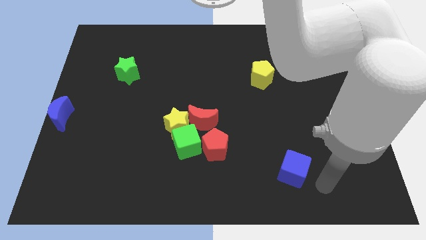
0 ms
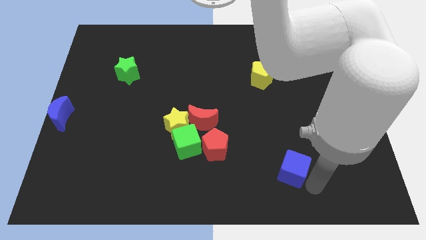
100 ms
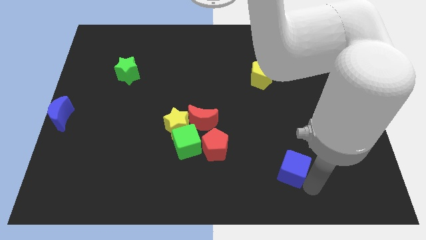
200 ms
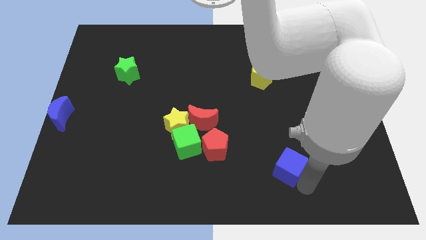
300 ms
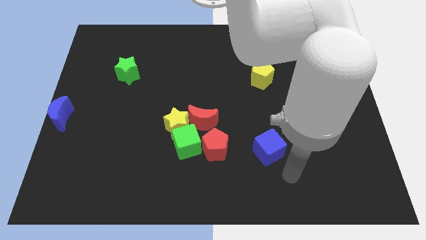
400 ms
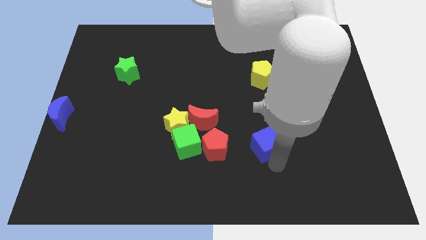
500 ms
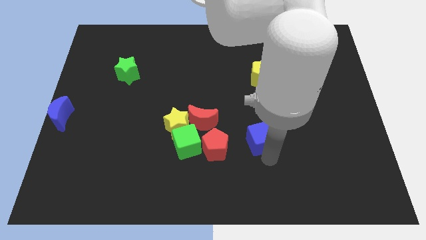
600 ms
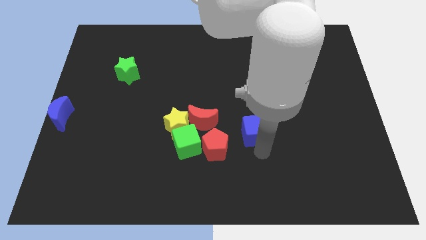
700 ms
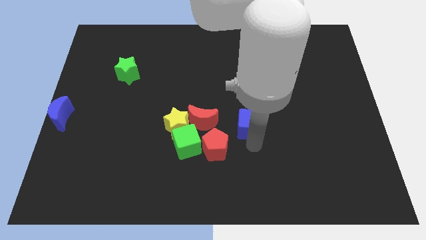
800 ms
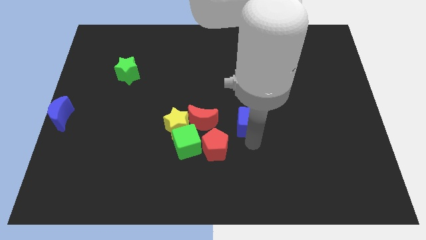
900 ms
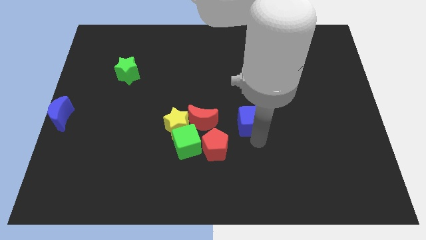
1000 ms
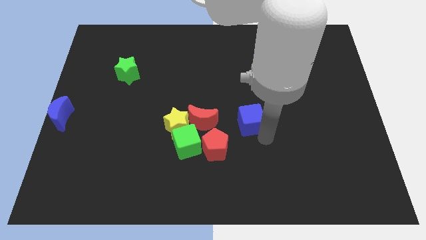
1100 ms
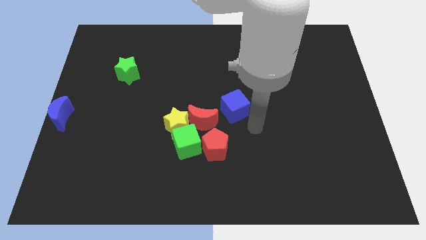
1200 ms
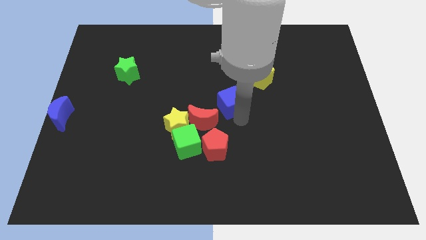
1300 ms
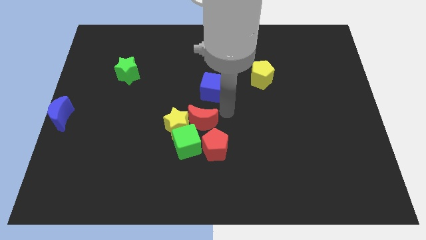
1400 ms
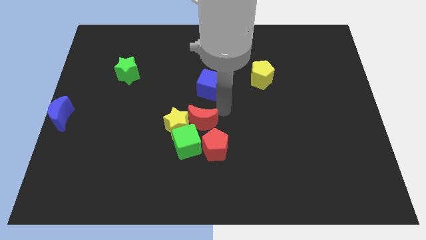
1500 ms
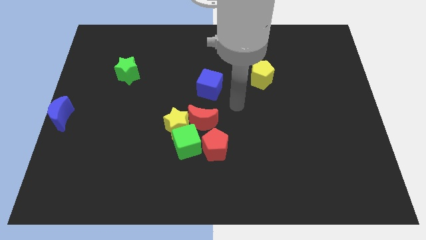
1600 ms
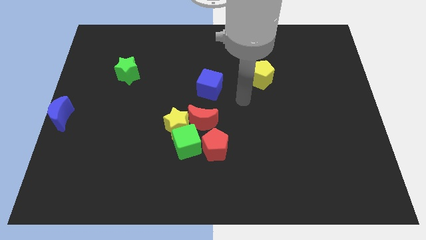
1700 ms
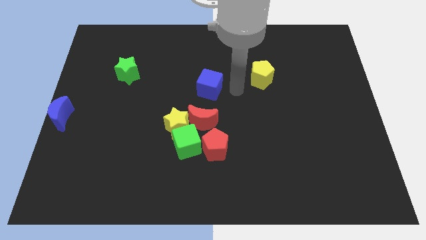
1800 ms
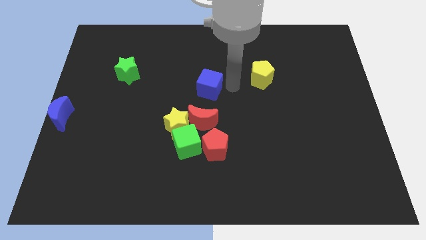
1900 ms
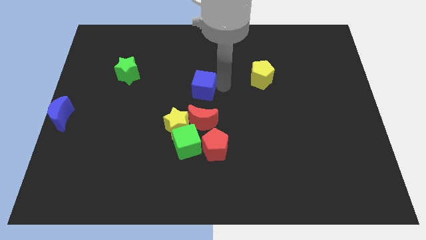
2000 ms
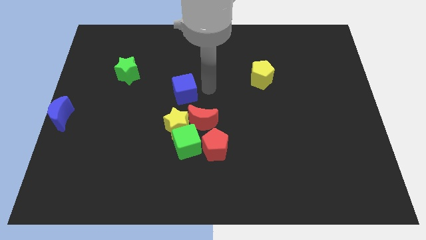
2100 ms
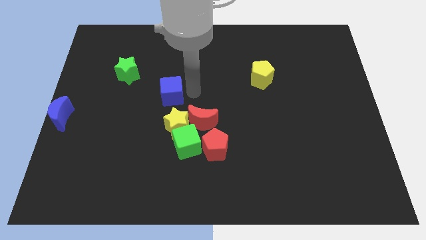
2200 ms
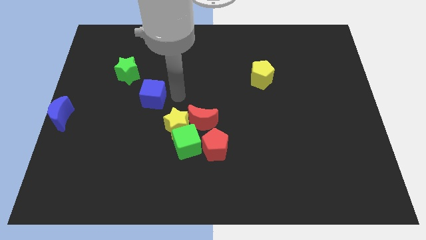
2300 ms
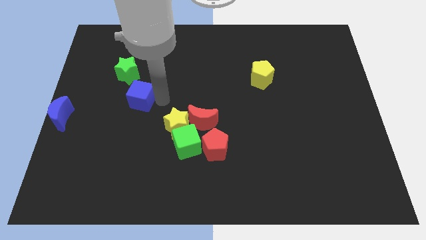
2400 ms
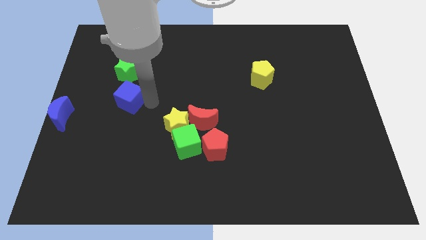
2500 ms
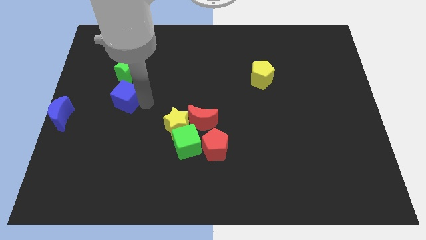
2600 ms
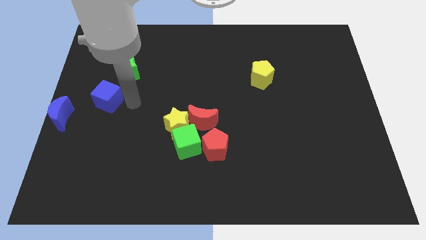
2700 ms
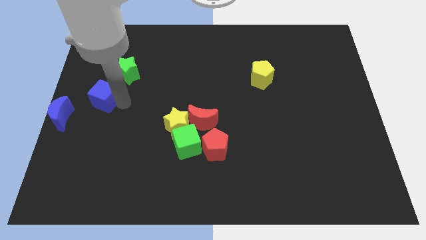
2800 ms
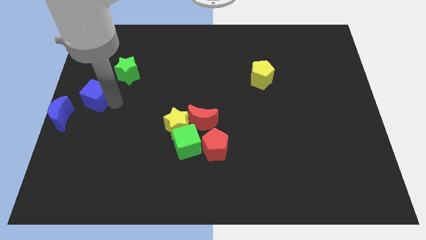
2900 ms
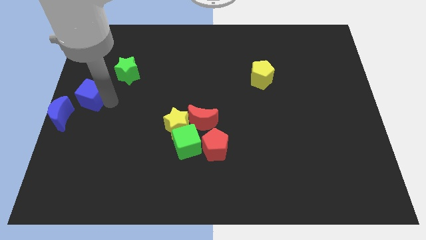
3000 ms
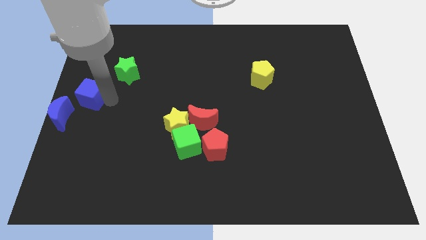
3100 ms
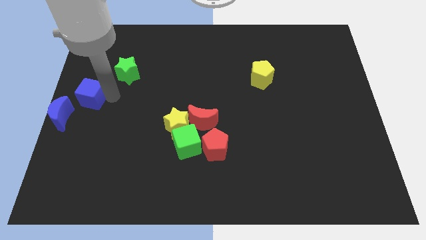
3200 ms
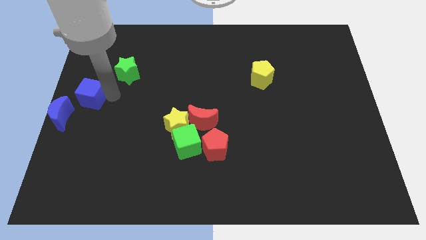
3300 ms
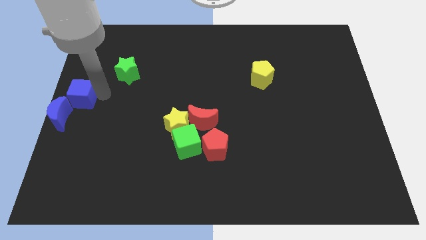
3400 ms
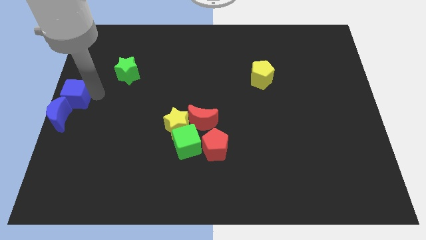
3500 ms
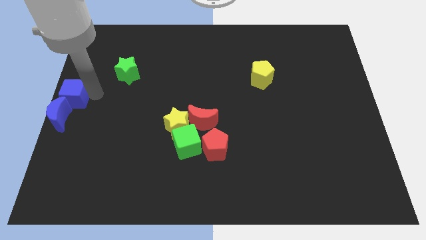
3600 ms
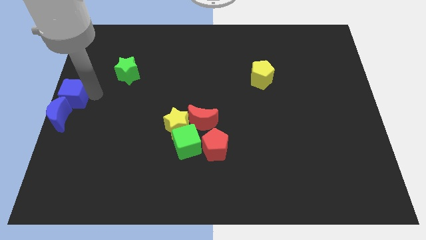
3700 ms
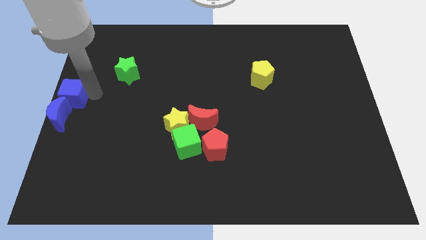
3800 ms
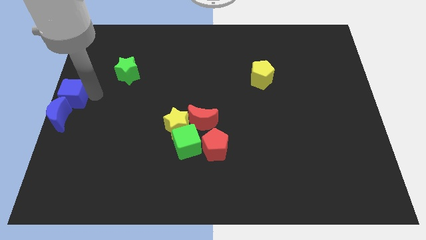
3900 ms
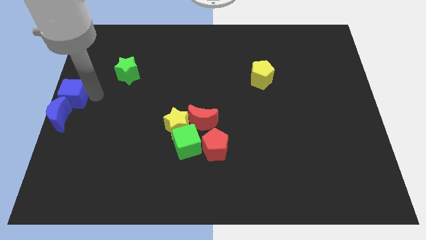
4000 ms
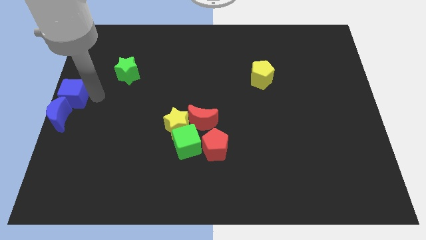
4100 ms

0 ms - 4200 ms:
slide blue cube into blue moon

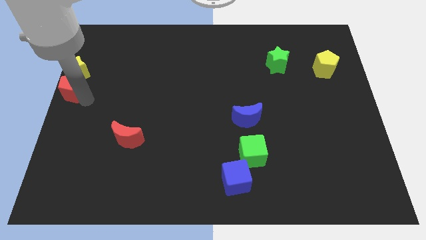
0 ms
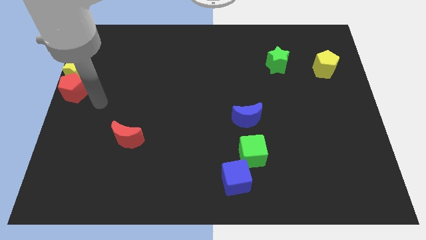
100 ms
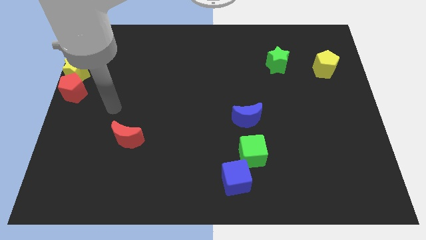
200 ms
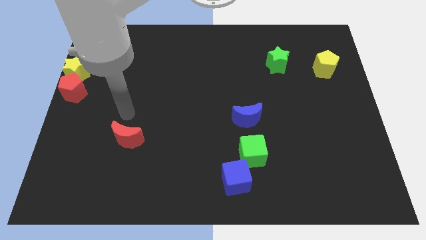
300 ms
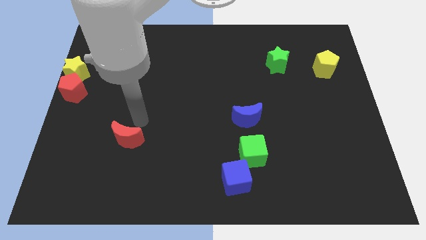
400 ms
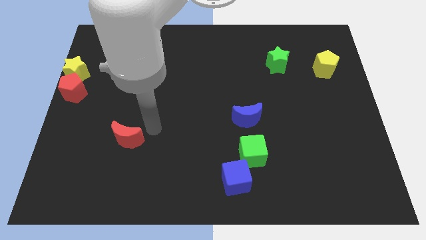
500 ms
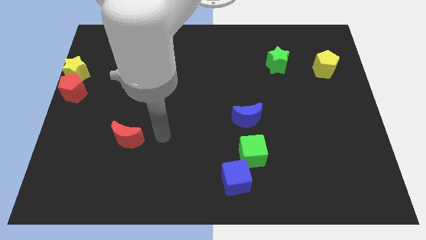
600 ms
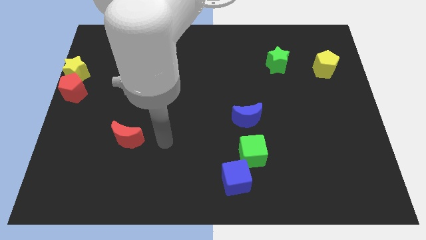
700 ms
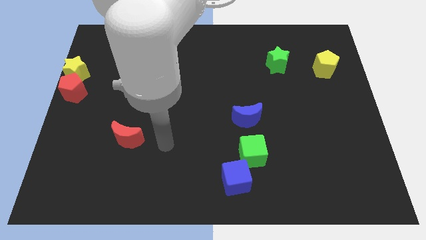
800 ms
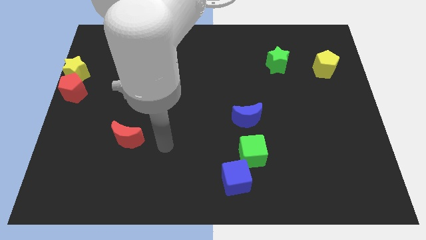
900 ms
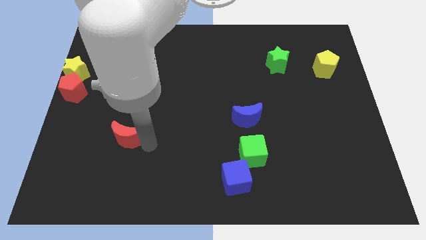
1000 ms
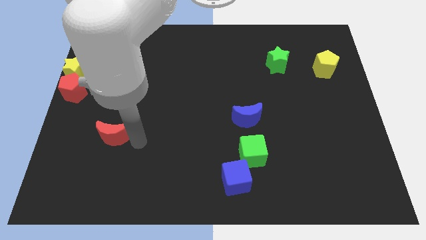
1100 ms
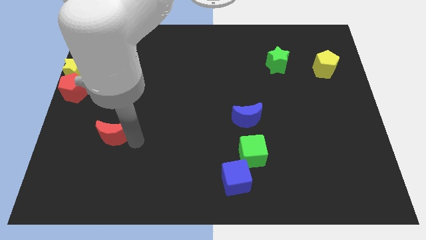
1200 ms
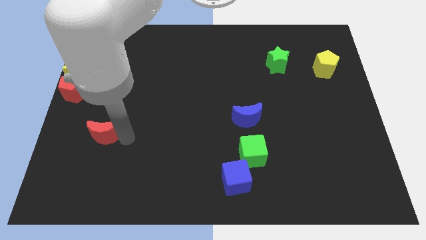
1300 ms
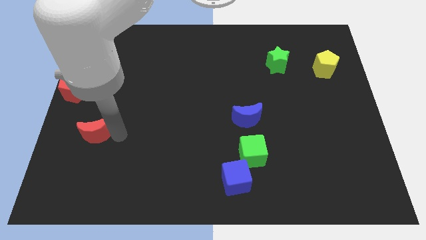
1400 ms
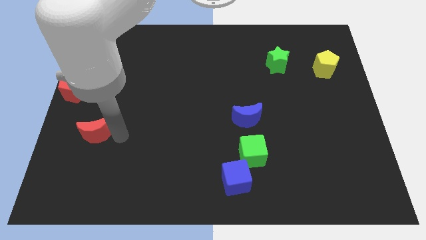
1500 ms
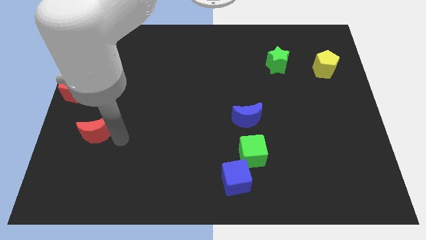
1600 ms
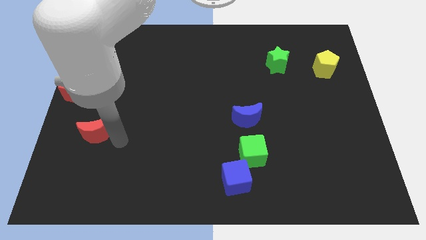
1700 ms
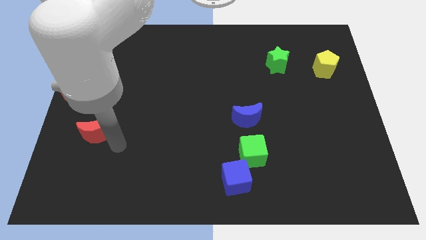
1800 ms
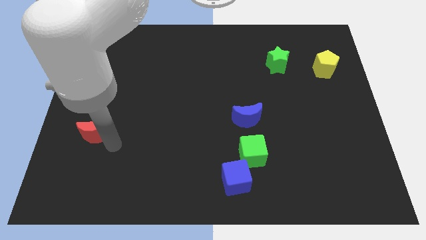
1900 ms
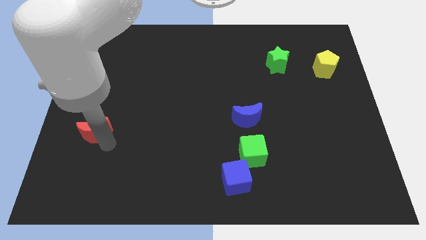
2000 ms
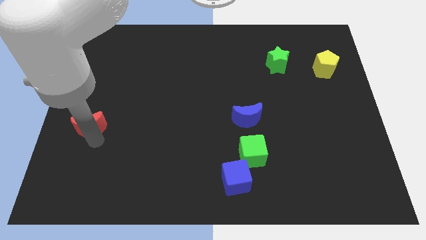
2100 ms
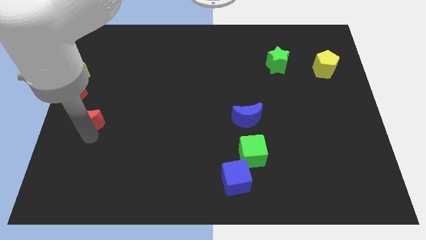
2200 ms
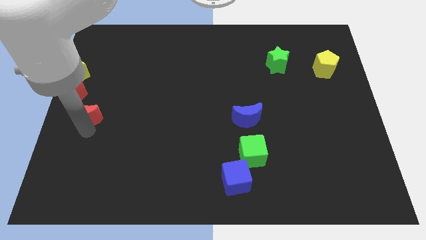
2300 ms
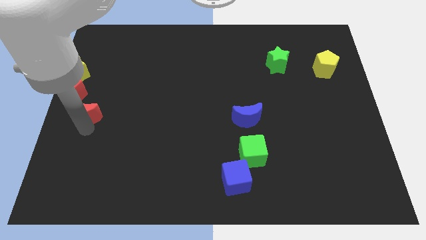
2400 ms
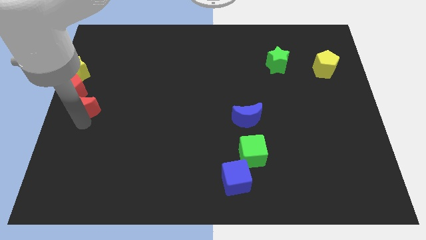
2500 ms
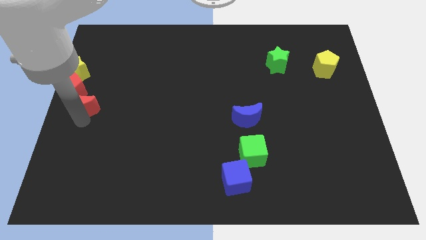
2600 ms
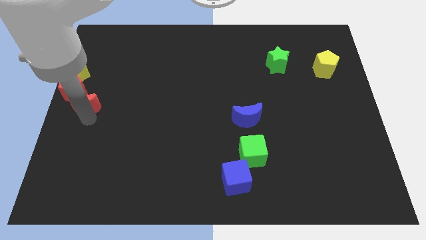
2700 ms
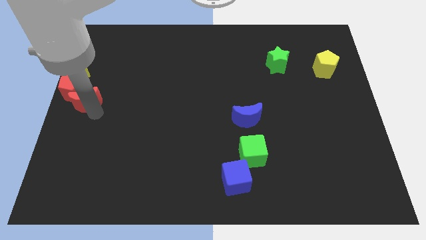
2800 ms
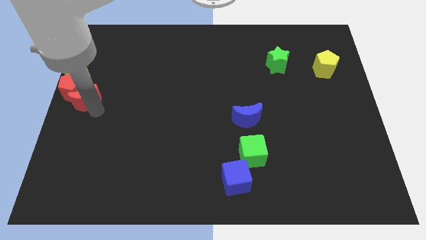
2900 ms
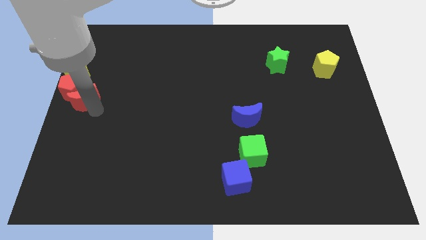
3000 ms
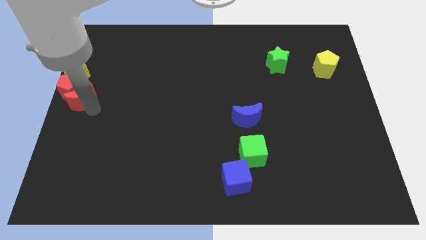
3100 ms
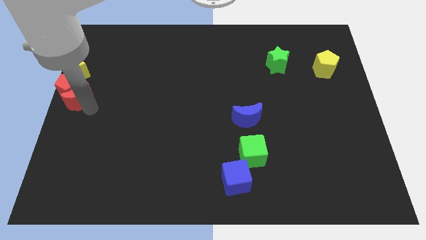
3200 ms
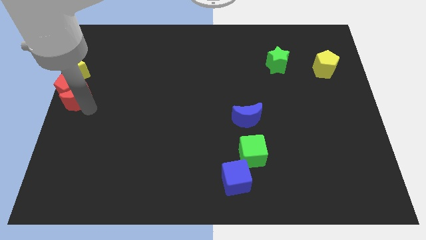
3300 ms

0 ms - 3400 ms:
push the red crescent at the bottom left of the red pentagon

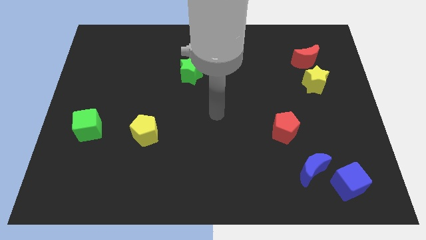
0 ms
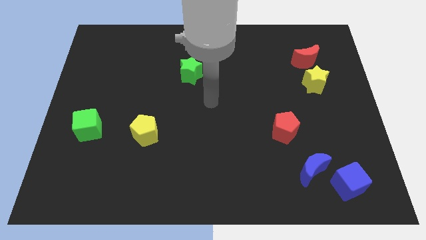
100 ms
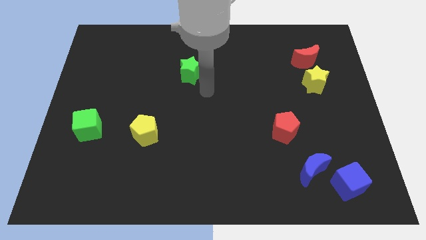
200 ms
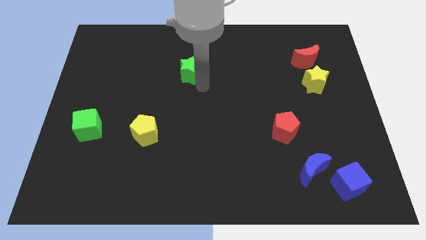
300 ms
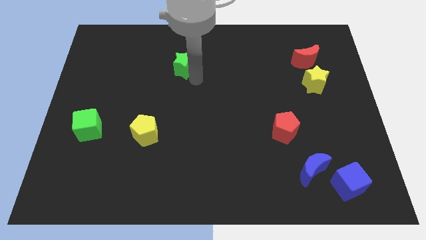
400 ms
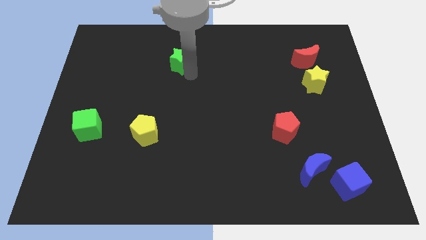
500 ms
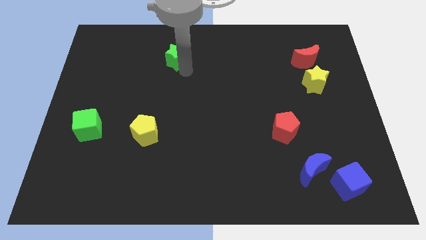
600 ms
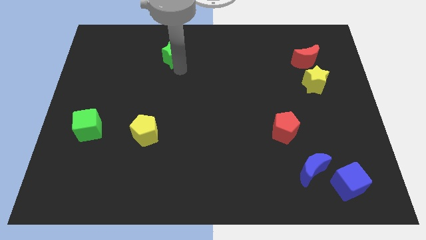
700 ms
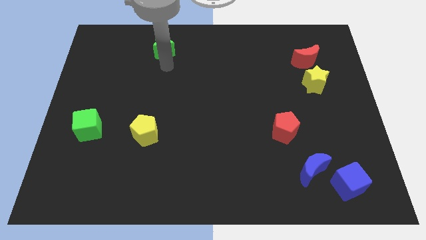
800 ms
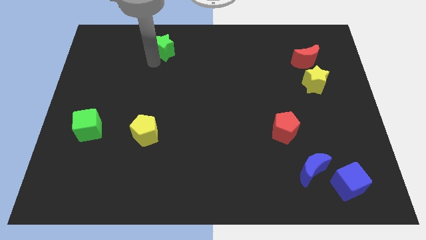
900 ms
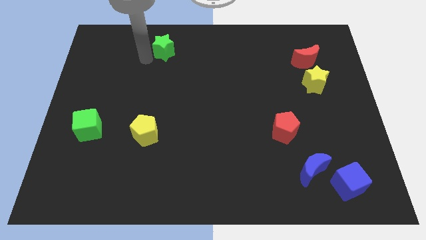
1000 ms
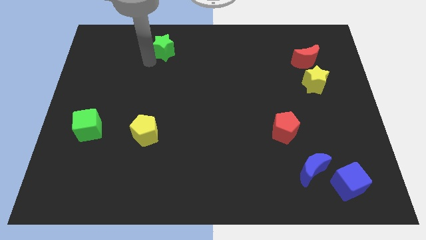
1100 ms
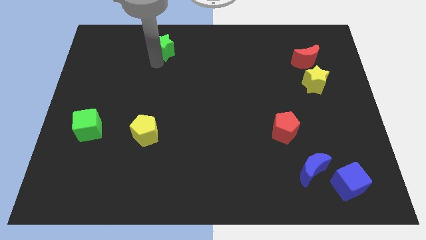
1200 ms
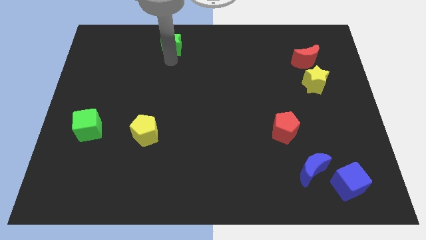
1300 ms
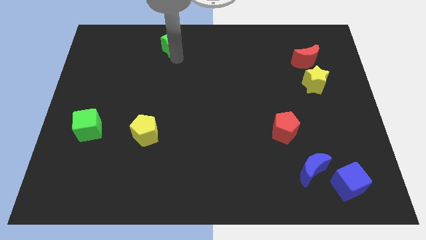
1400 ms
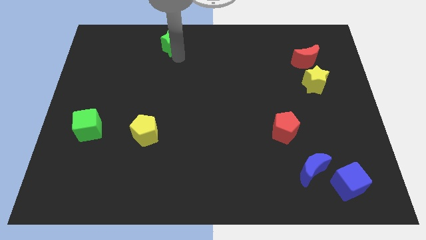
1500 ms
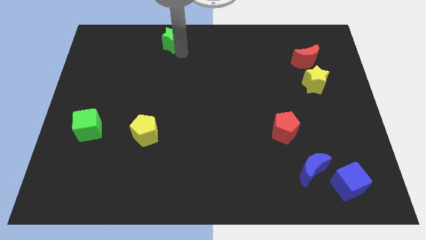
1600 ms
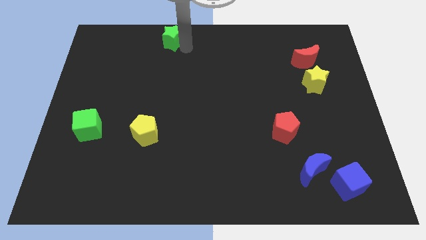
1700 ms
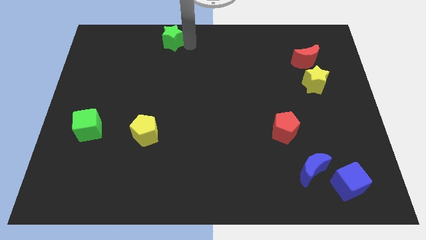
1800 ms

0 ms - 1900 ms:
move the green star towards the top of the board
